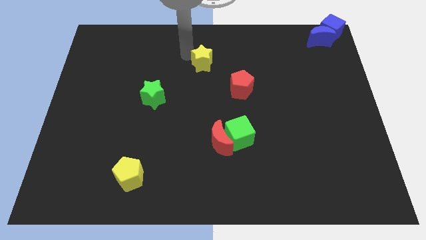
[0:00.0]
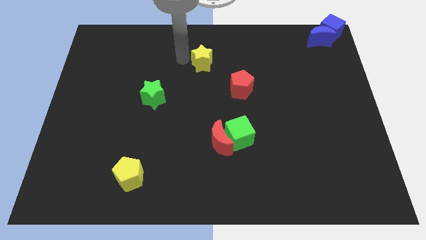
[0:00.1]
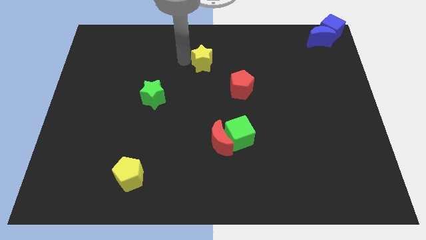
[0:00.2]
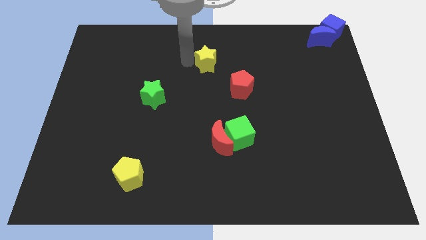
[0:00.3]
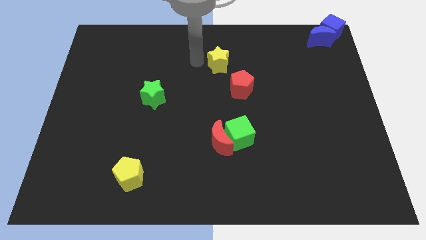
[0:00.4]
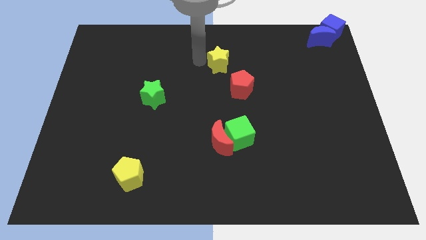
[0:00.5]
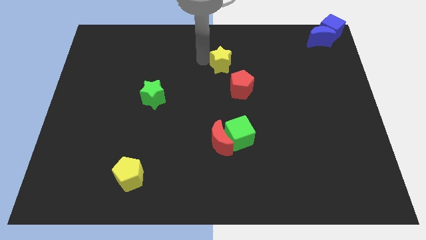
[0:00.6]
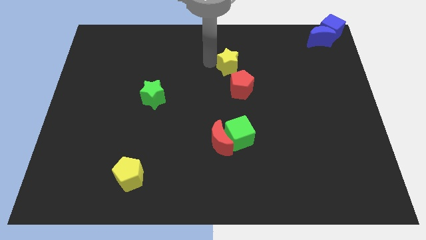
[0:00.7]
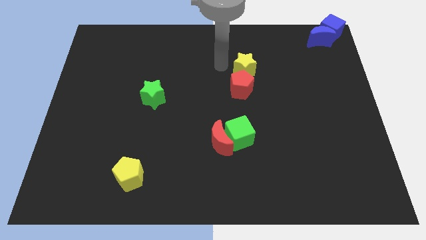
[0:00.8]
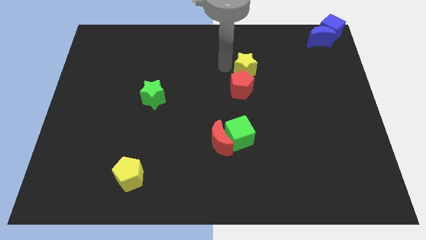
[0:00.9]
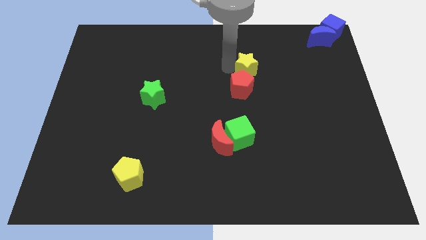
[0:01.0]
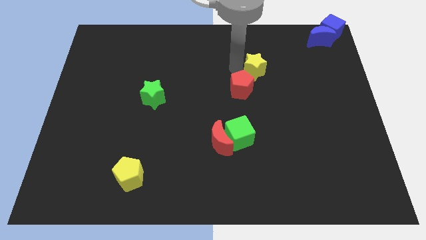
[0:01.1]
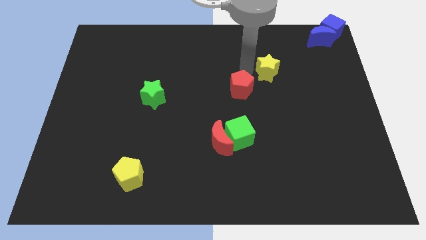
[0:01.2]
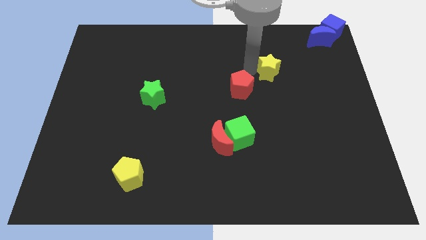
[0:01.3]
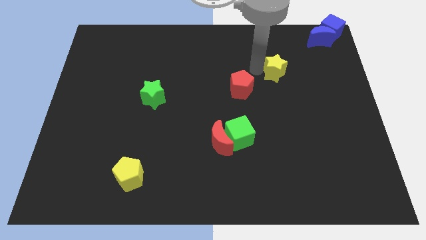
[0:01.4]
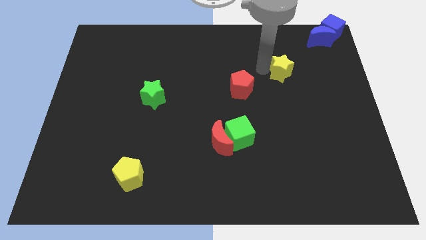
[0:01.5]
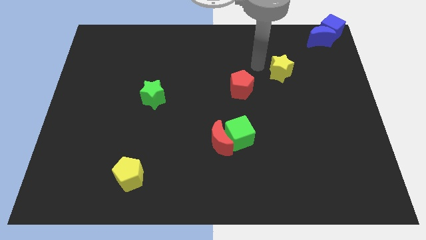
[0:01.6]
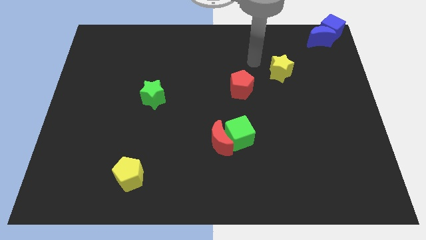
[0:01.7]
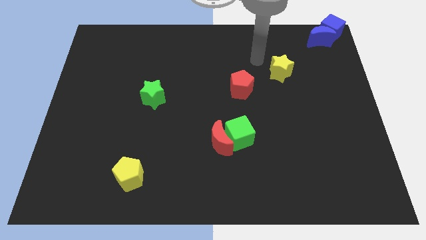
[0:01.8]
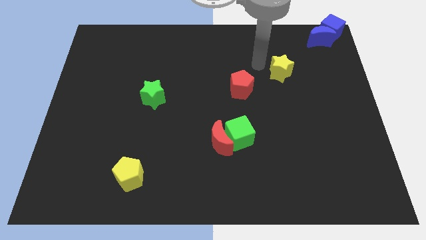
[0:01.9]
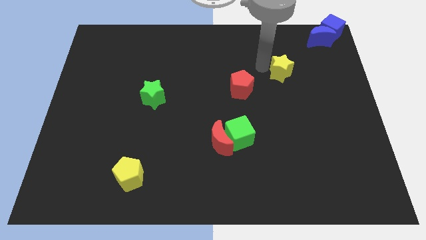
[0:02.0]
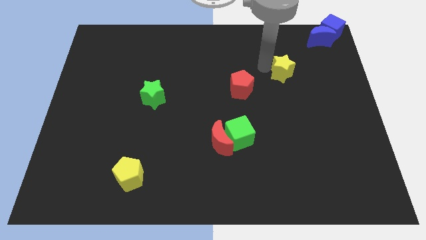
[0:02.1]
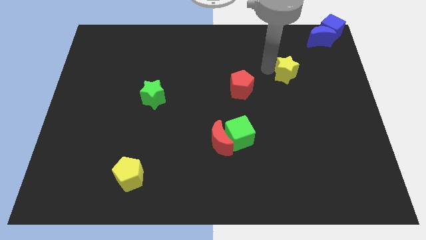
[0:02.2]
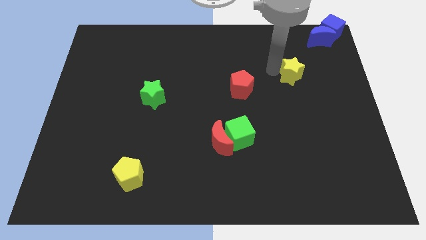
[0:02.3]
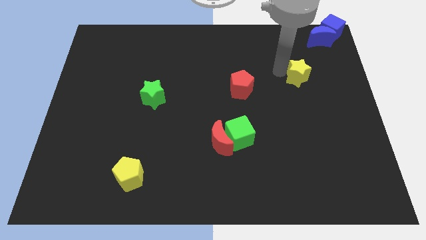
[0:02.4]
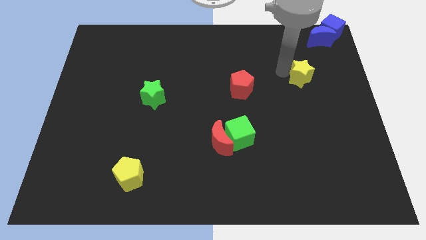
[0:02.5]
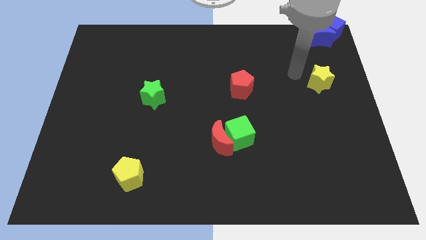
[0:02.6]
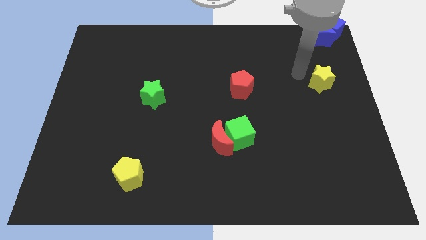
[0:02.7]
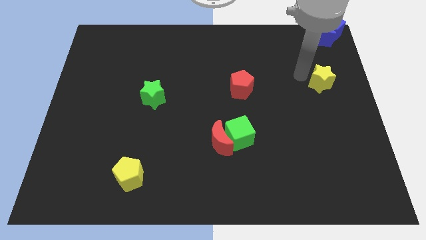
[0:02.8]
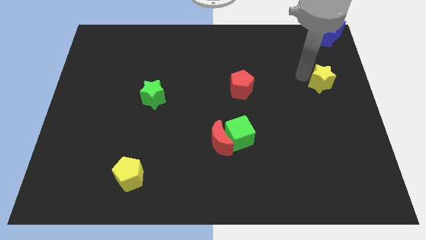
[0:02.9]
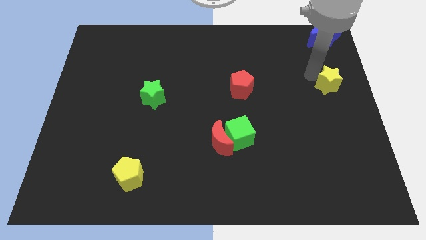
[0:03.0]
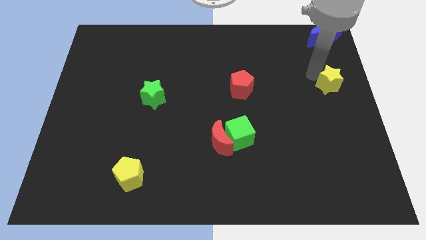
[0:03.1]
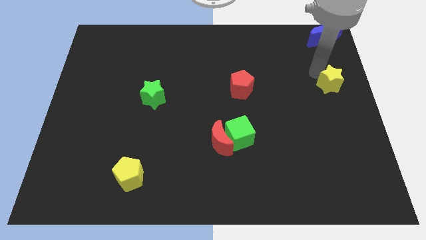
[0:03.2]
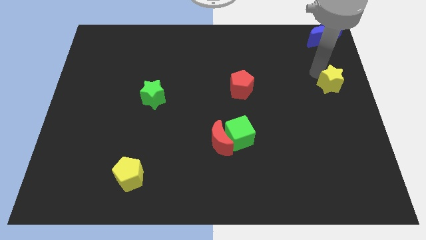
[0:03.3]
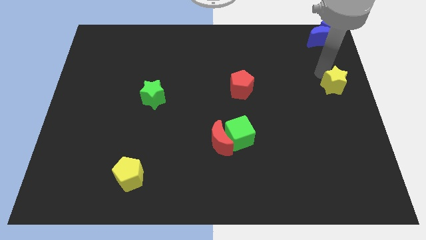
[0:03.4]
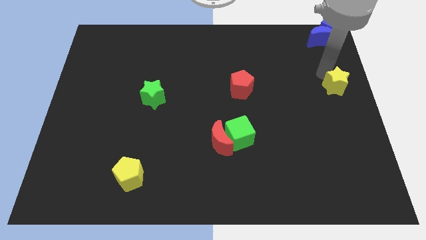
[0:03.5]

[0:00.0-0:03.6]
move the yellow star towards right corner of the board

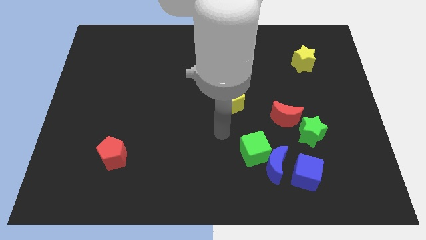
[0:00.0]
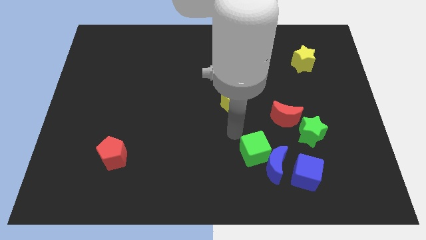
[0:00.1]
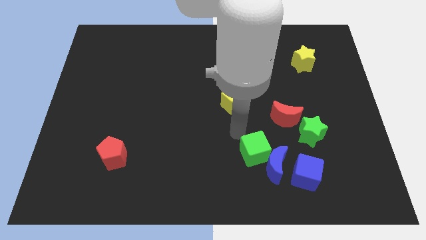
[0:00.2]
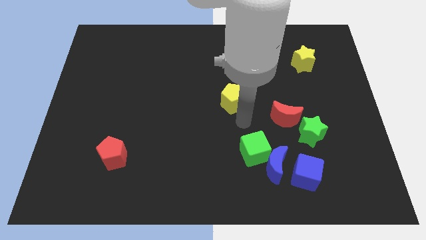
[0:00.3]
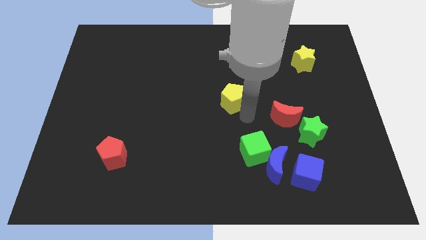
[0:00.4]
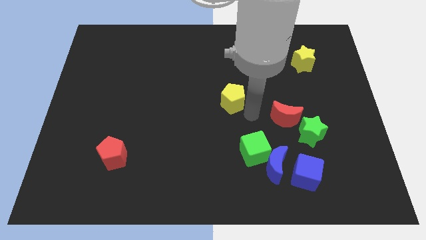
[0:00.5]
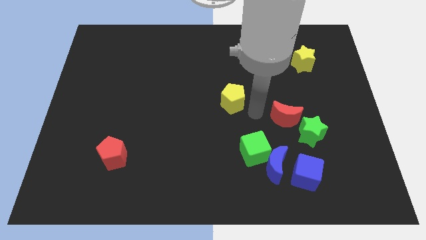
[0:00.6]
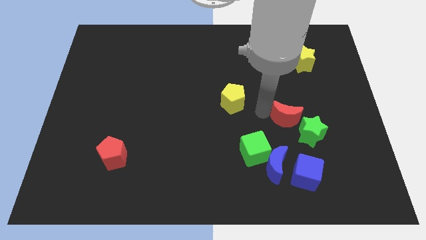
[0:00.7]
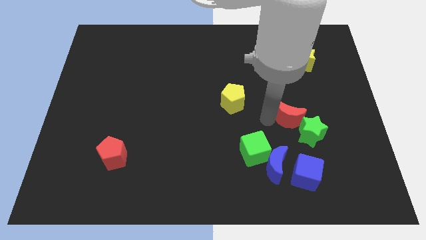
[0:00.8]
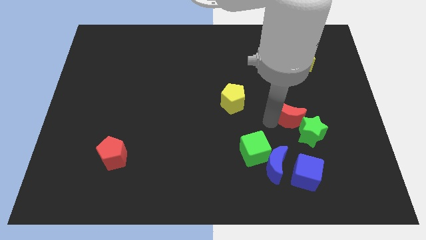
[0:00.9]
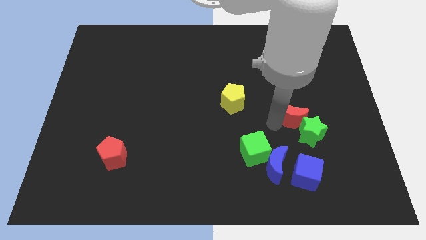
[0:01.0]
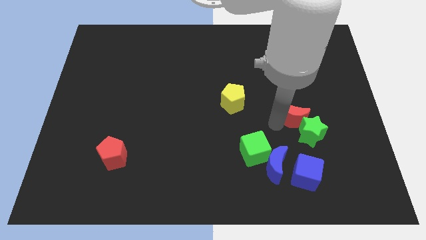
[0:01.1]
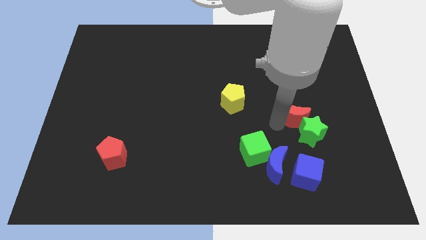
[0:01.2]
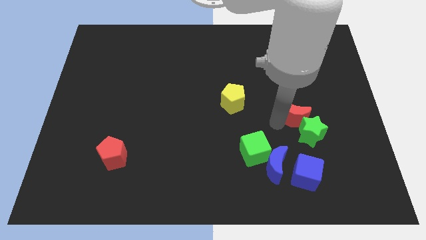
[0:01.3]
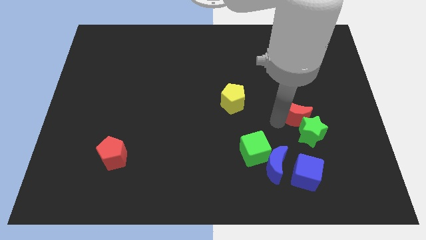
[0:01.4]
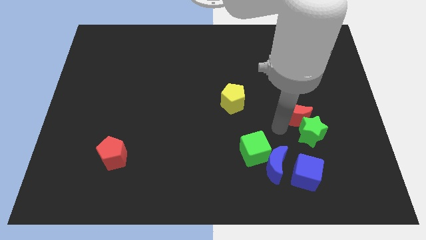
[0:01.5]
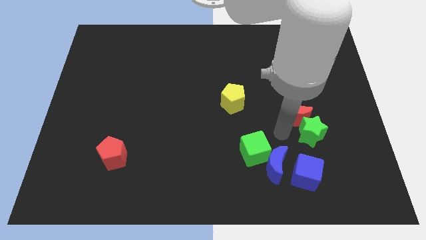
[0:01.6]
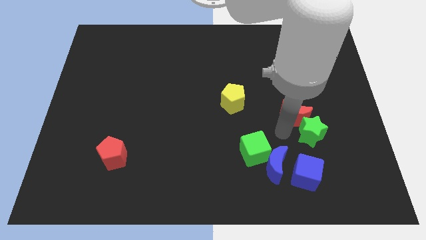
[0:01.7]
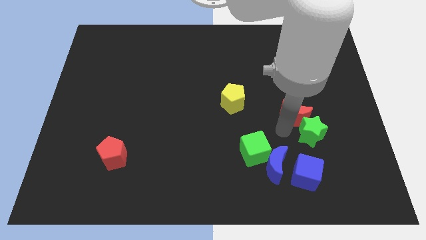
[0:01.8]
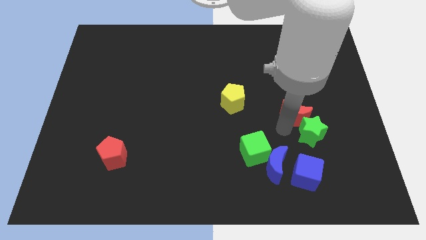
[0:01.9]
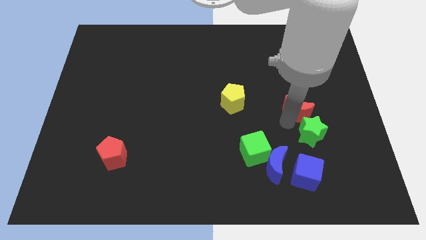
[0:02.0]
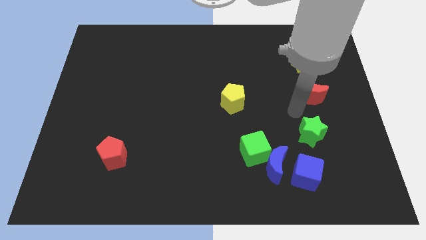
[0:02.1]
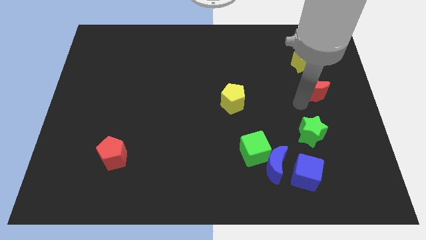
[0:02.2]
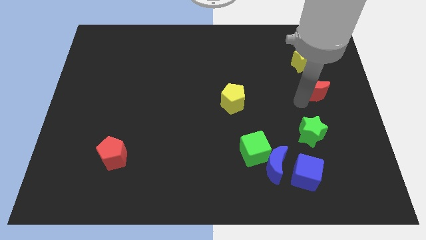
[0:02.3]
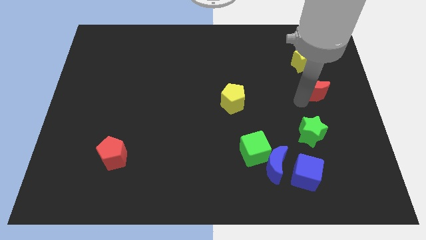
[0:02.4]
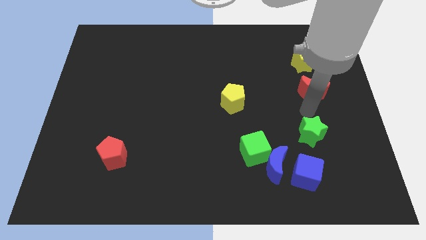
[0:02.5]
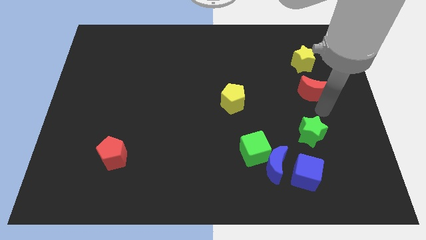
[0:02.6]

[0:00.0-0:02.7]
drag red moon upwards

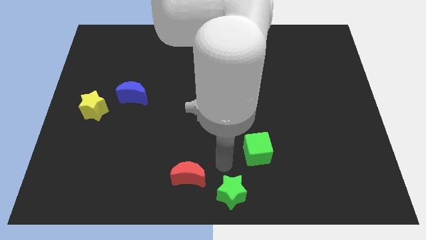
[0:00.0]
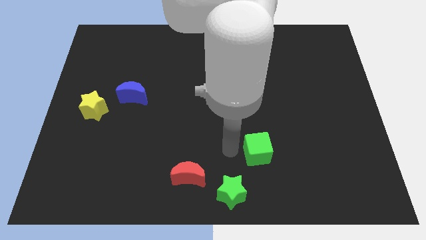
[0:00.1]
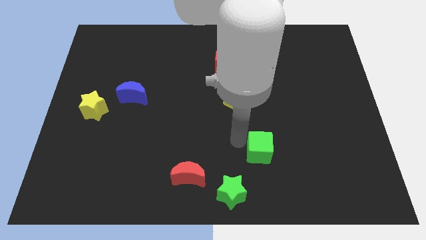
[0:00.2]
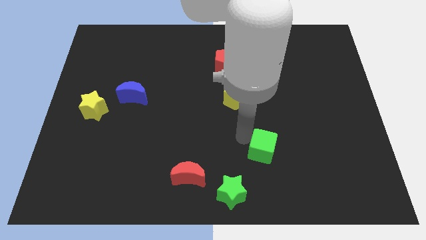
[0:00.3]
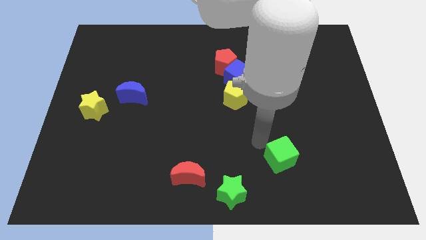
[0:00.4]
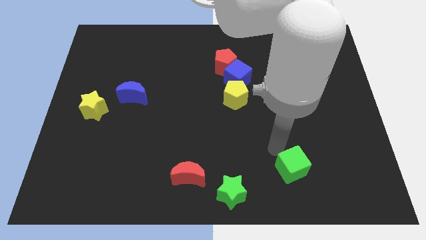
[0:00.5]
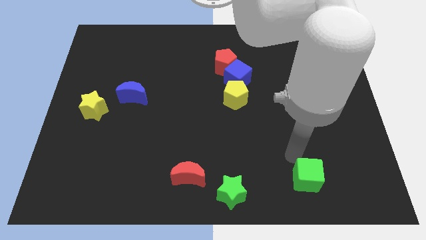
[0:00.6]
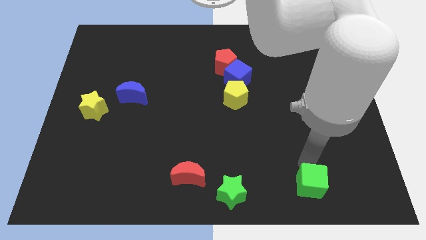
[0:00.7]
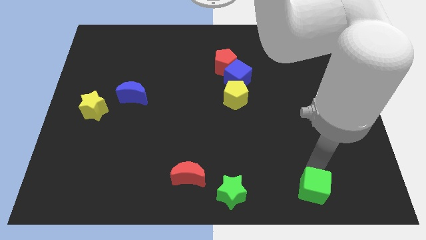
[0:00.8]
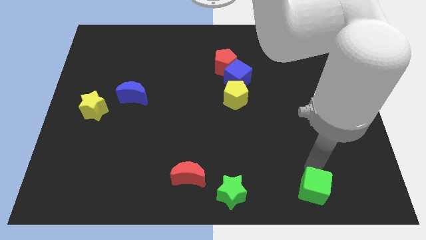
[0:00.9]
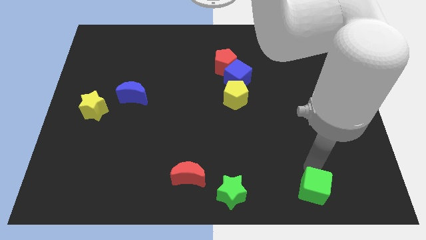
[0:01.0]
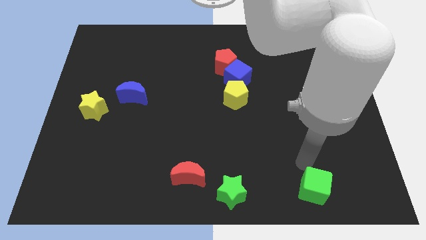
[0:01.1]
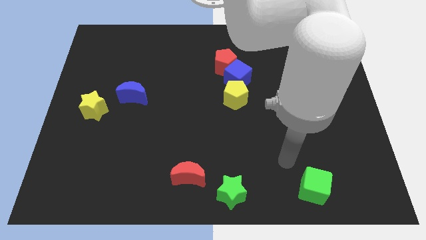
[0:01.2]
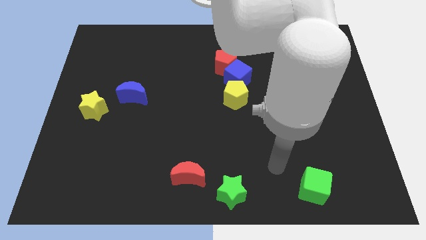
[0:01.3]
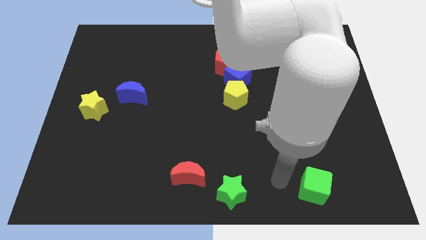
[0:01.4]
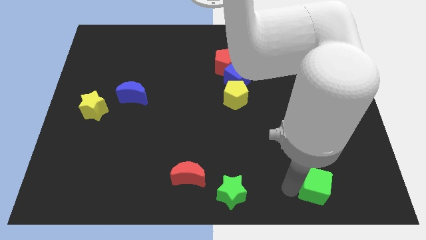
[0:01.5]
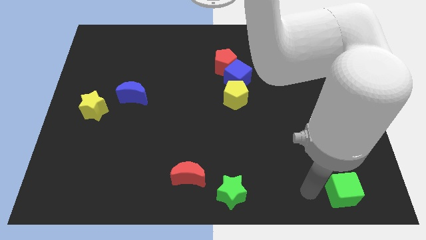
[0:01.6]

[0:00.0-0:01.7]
place the green cube to the right of the green star

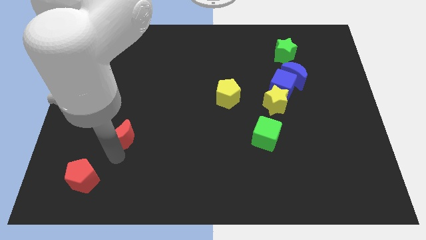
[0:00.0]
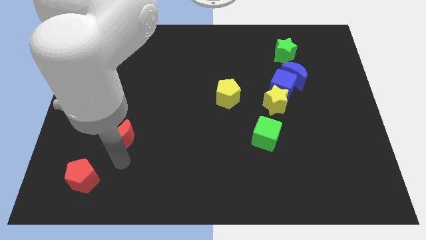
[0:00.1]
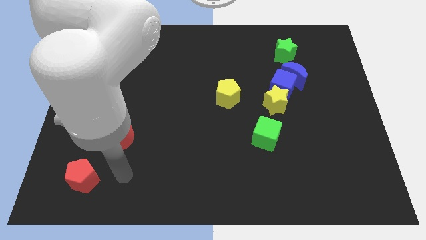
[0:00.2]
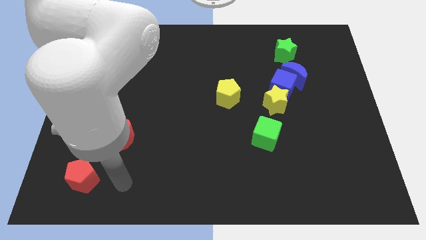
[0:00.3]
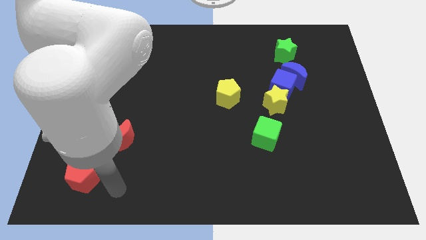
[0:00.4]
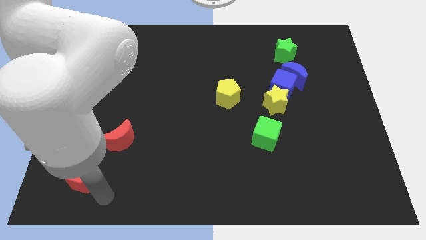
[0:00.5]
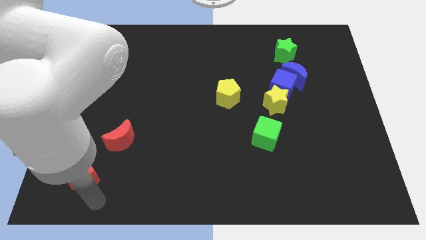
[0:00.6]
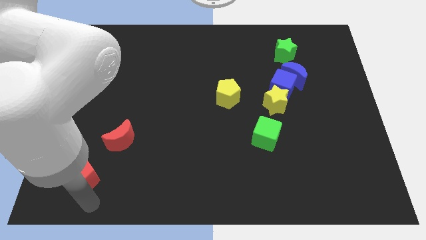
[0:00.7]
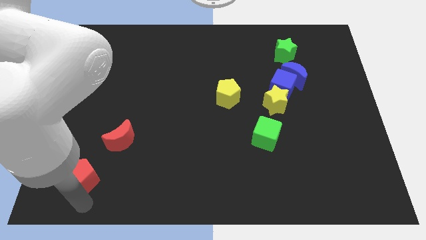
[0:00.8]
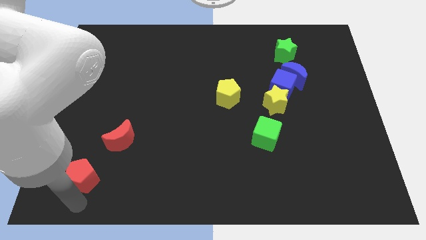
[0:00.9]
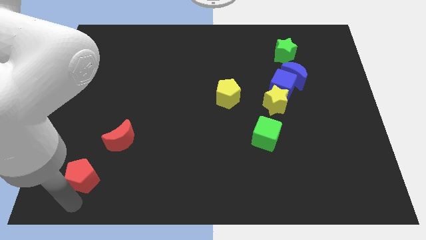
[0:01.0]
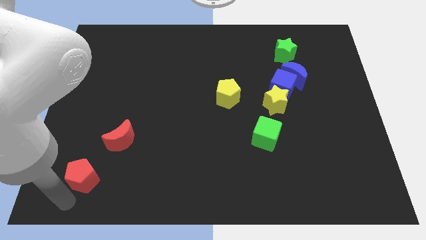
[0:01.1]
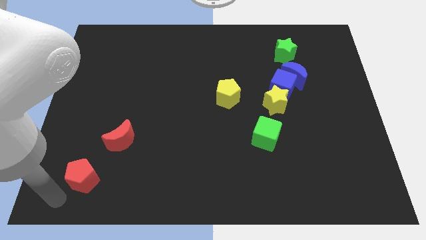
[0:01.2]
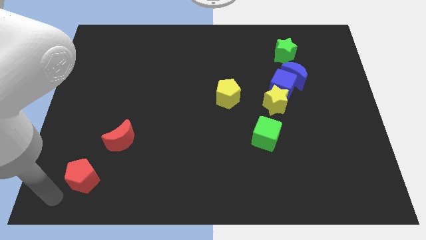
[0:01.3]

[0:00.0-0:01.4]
move your arm away from the red moon
